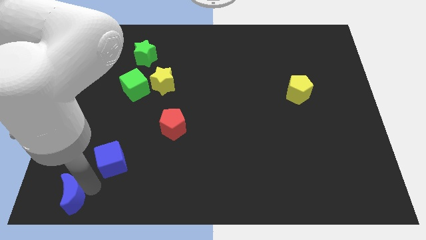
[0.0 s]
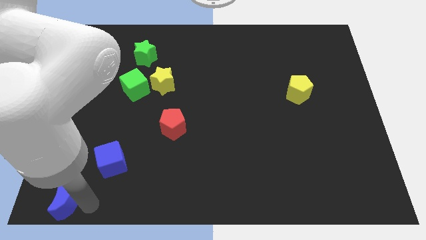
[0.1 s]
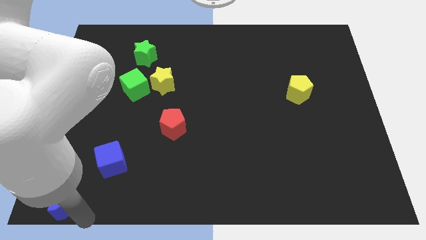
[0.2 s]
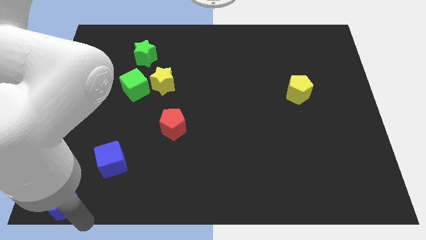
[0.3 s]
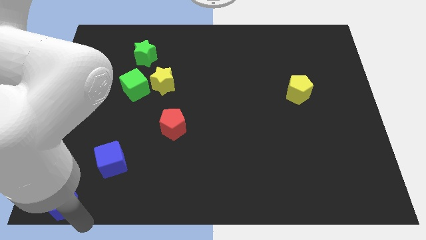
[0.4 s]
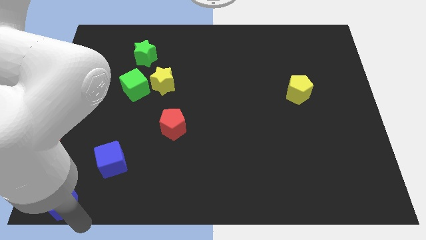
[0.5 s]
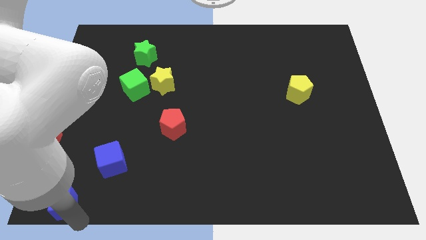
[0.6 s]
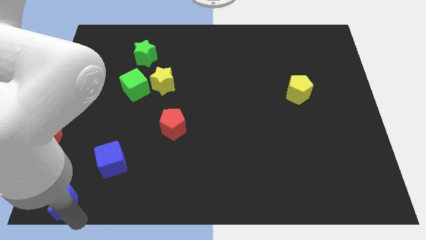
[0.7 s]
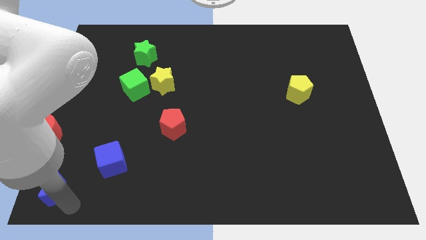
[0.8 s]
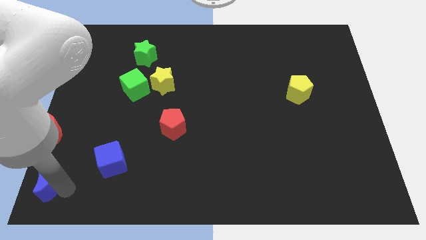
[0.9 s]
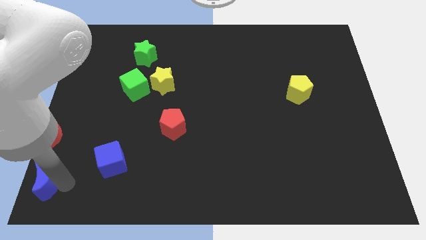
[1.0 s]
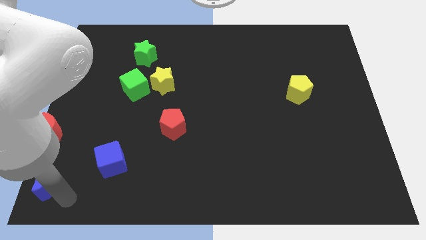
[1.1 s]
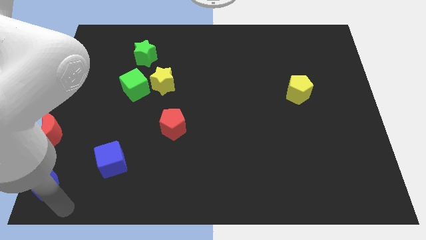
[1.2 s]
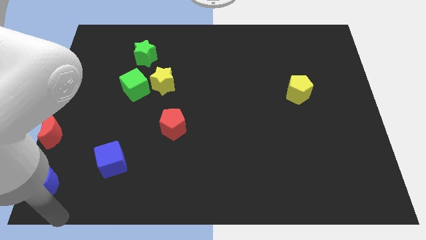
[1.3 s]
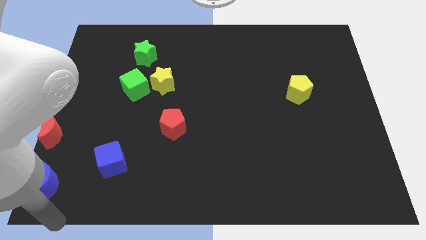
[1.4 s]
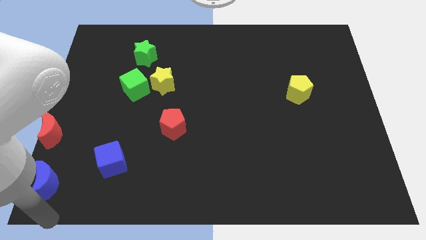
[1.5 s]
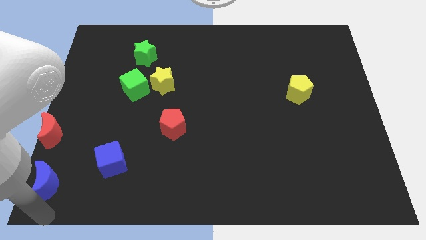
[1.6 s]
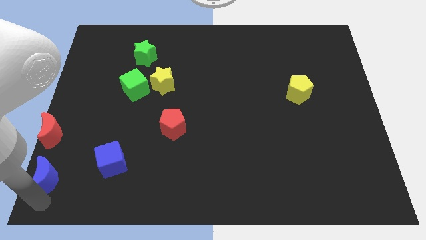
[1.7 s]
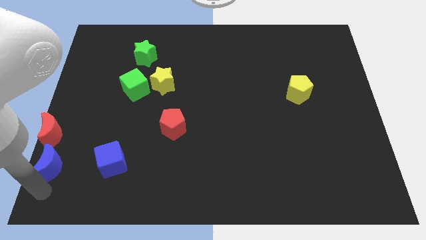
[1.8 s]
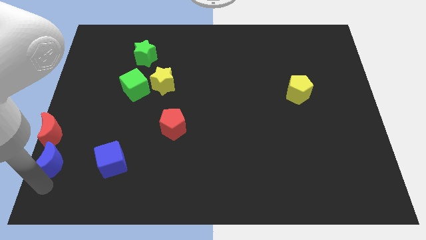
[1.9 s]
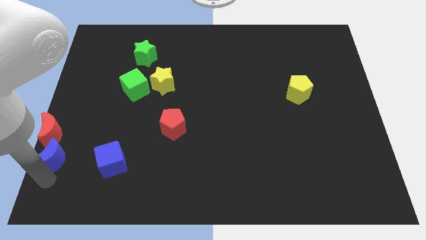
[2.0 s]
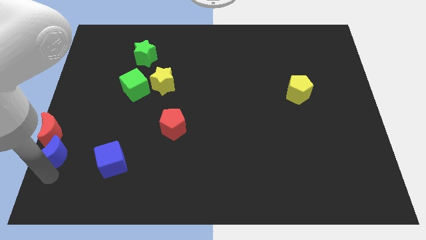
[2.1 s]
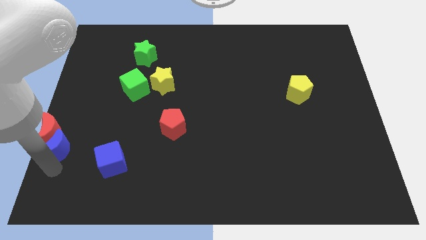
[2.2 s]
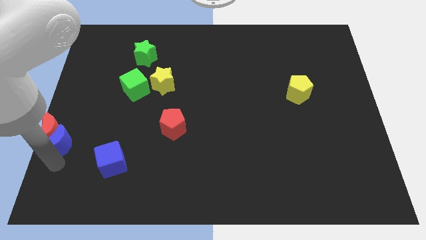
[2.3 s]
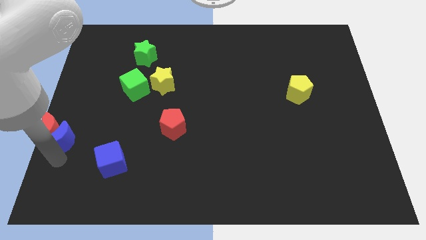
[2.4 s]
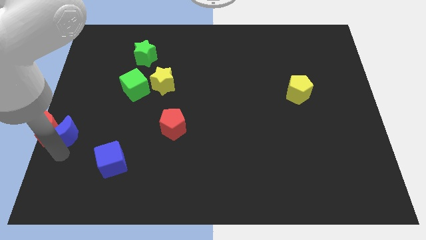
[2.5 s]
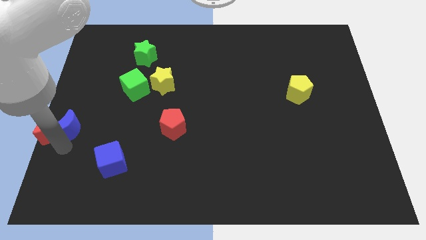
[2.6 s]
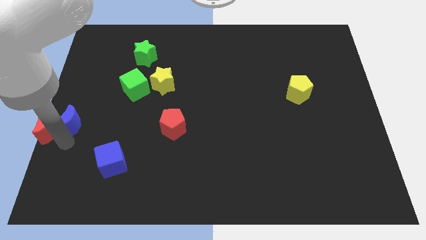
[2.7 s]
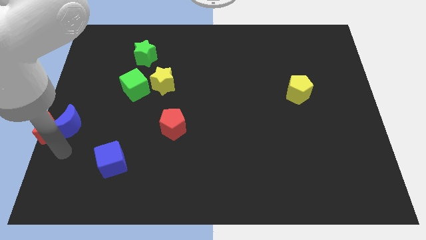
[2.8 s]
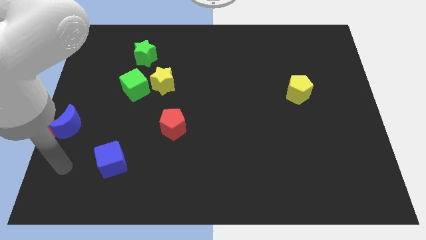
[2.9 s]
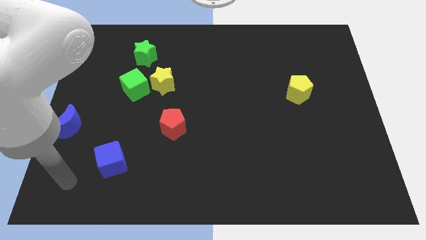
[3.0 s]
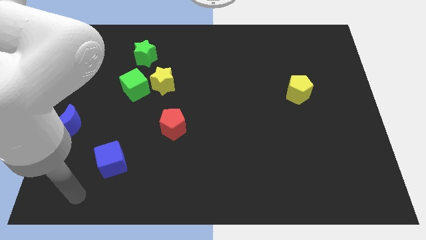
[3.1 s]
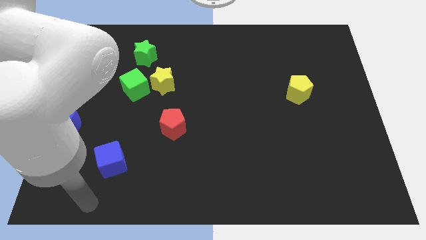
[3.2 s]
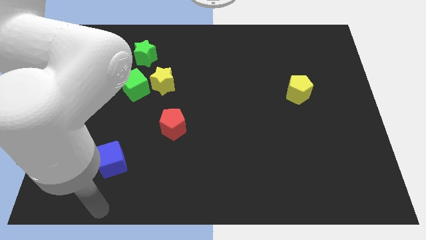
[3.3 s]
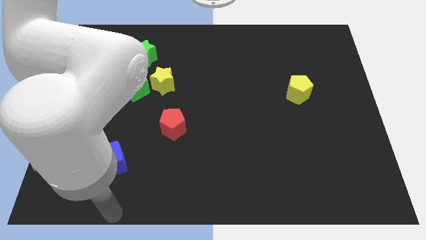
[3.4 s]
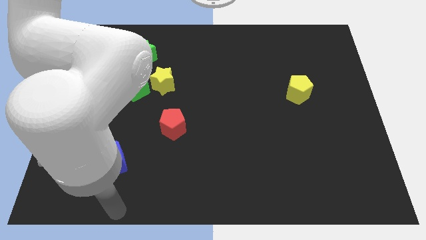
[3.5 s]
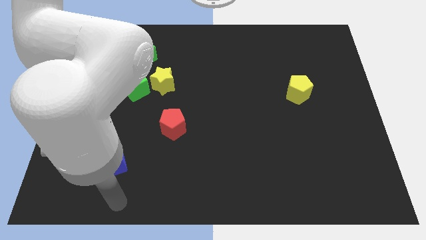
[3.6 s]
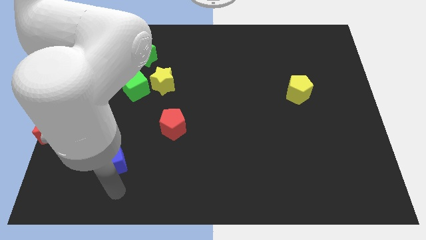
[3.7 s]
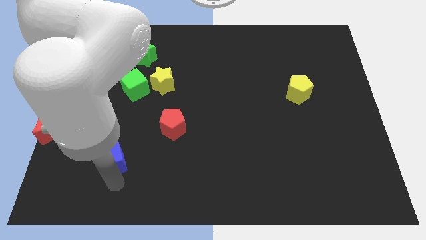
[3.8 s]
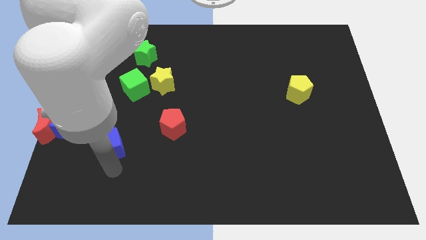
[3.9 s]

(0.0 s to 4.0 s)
push blue half moon towards red half moon

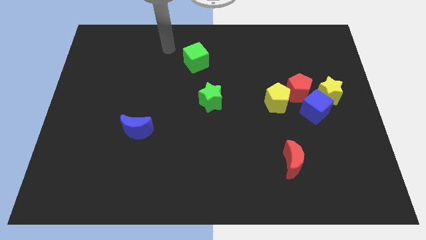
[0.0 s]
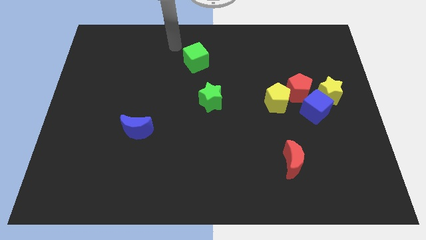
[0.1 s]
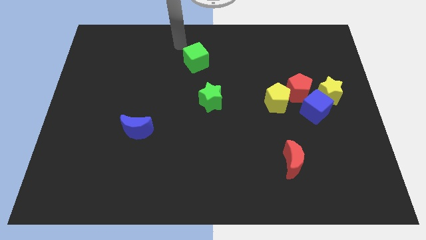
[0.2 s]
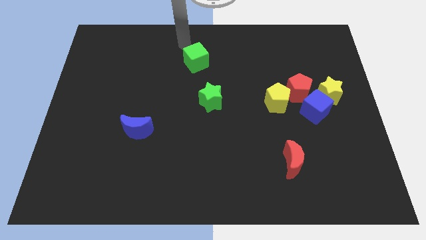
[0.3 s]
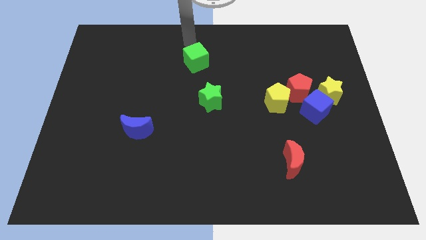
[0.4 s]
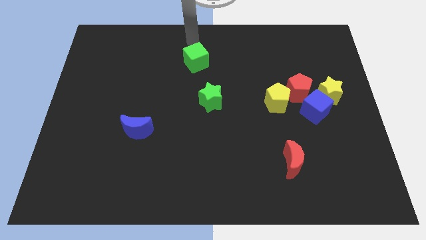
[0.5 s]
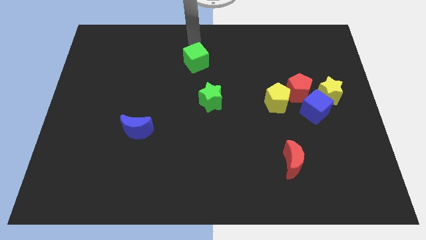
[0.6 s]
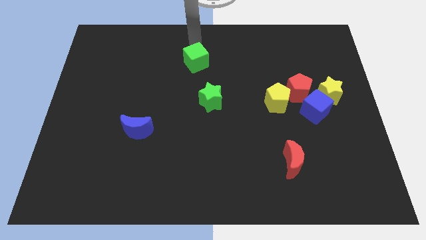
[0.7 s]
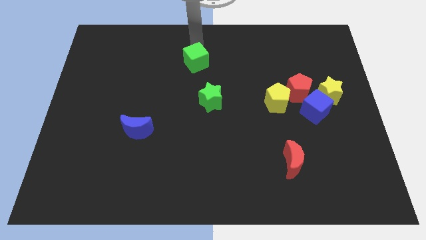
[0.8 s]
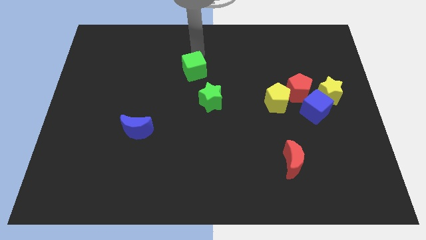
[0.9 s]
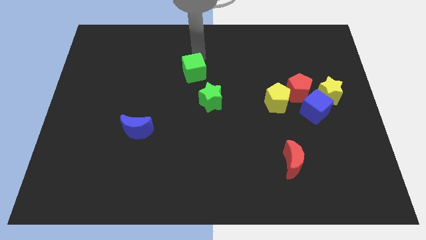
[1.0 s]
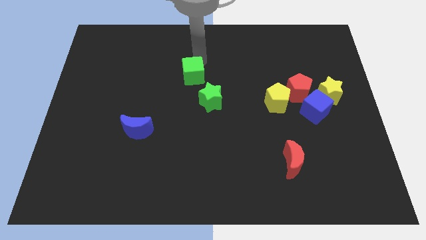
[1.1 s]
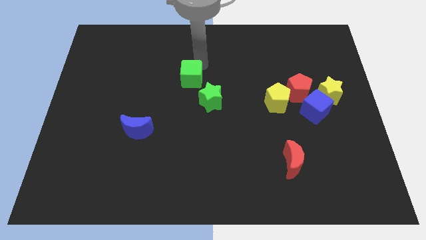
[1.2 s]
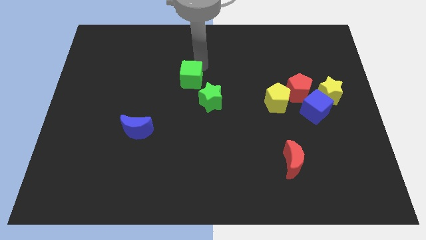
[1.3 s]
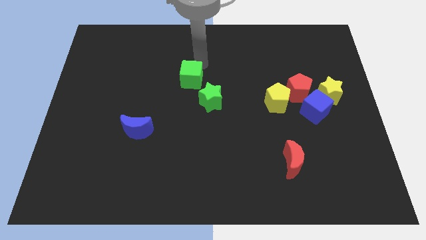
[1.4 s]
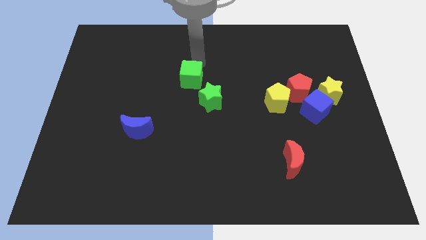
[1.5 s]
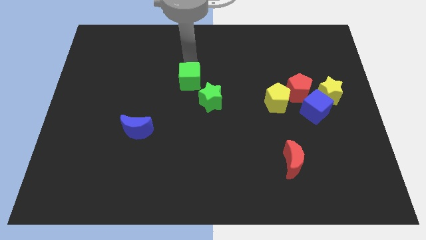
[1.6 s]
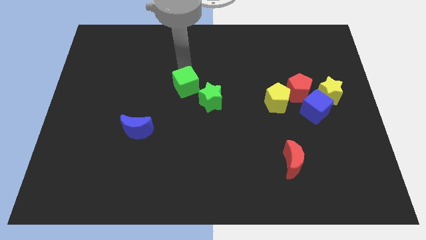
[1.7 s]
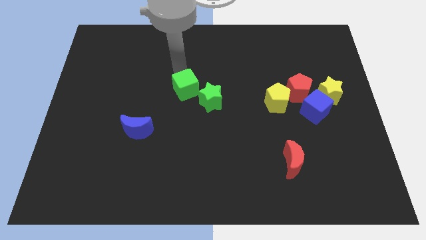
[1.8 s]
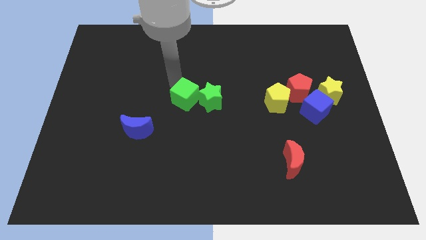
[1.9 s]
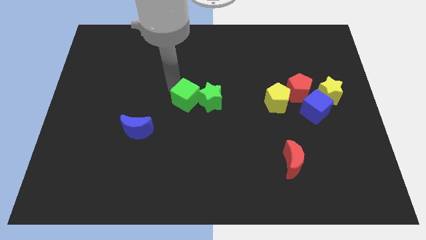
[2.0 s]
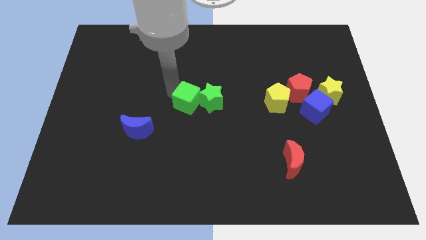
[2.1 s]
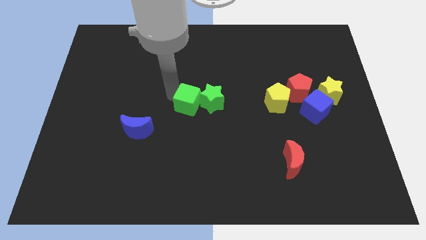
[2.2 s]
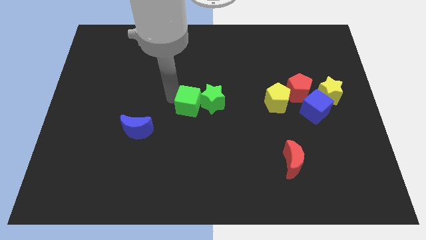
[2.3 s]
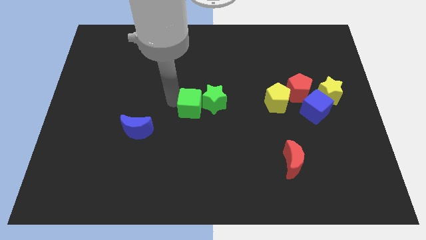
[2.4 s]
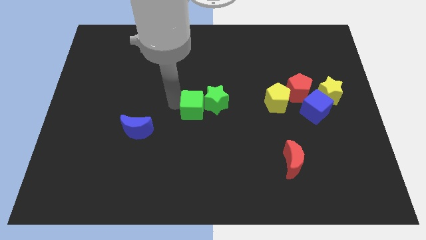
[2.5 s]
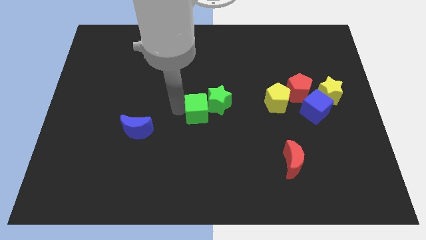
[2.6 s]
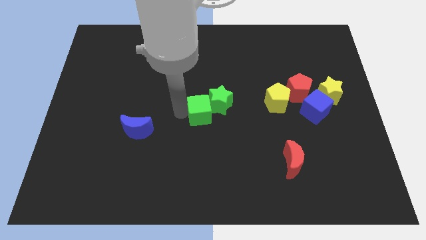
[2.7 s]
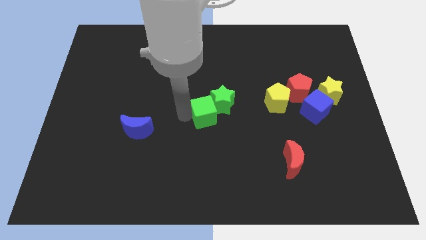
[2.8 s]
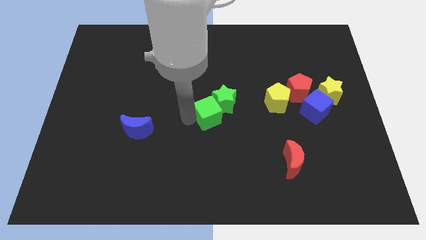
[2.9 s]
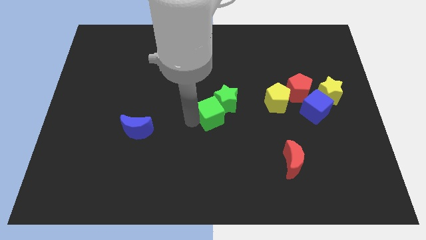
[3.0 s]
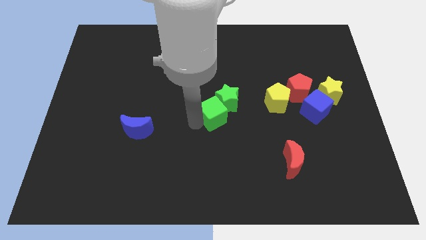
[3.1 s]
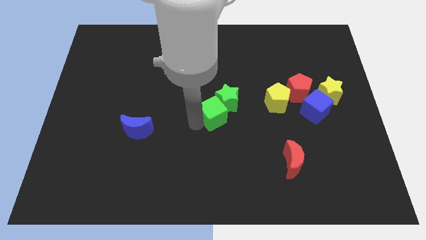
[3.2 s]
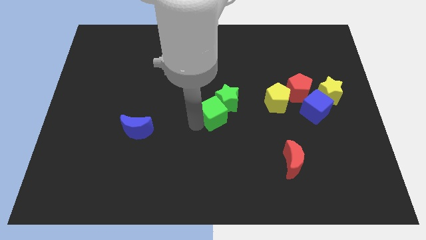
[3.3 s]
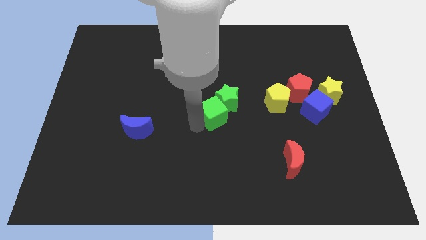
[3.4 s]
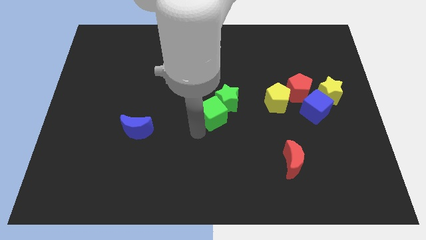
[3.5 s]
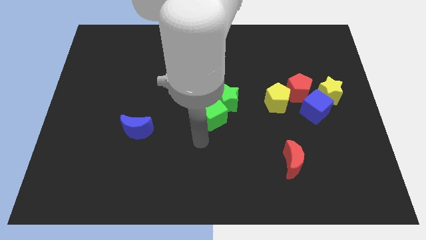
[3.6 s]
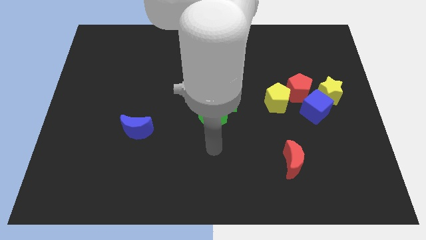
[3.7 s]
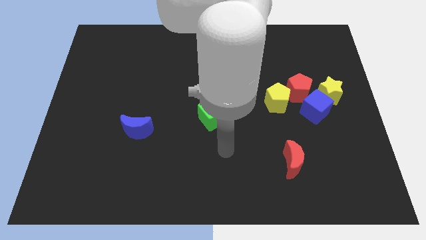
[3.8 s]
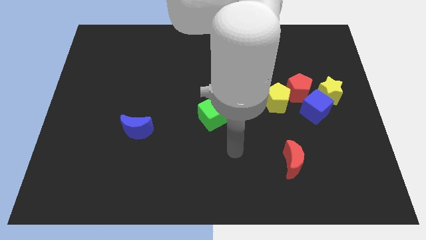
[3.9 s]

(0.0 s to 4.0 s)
push the green cube diagonally to the bottom left of the green star

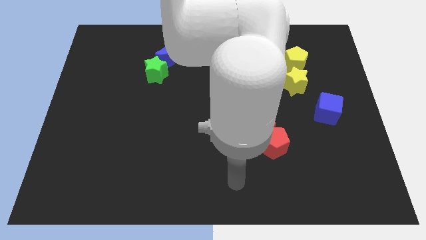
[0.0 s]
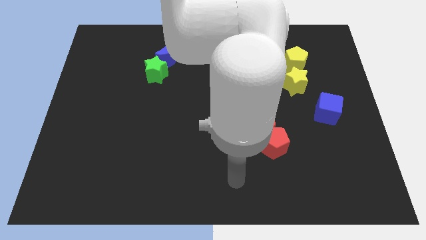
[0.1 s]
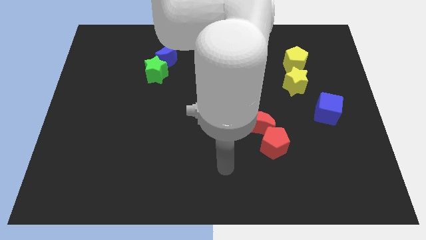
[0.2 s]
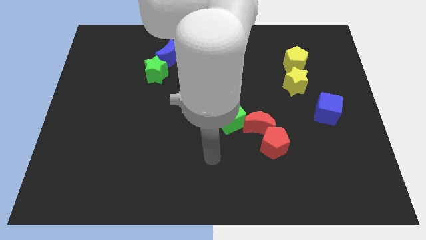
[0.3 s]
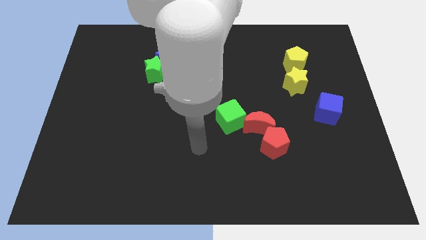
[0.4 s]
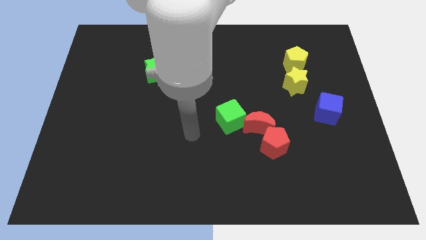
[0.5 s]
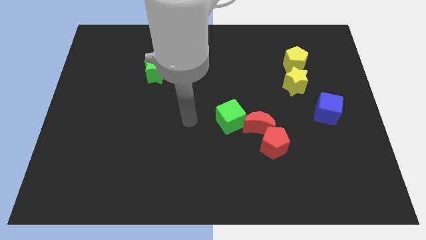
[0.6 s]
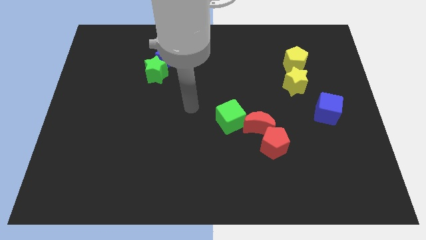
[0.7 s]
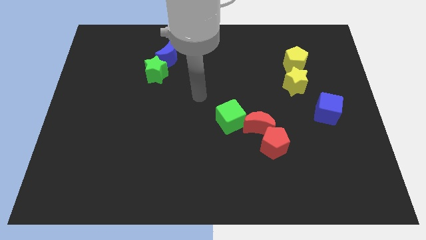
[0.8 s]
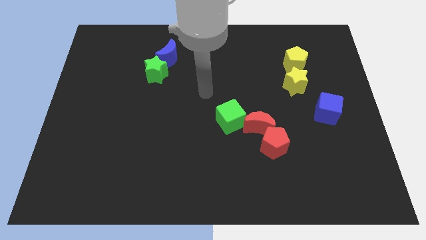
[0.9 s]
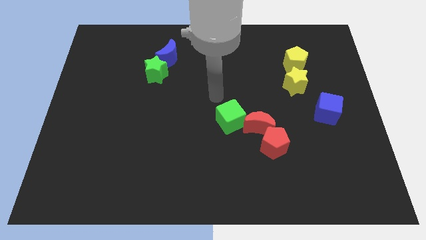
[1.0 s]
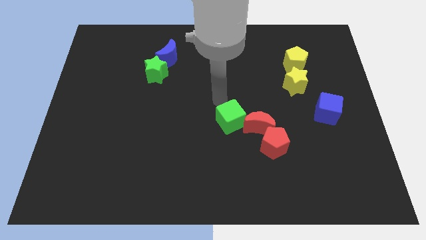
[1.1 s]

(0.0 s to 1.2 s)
point the arm above the green cube
